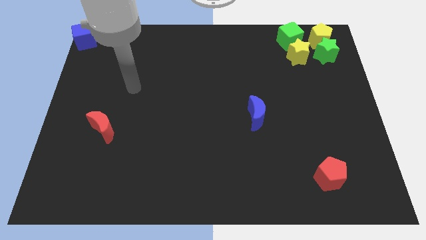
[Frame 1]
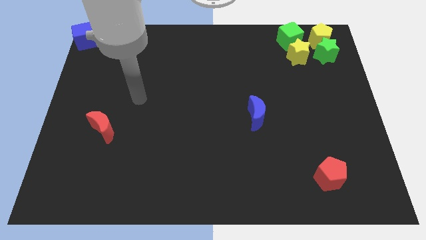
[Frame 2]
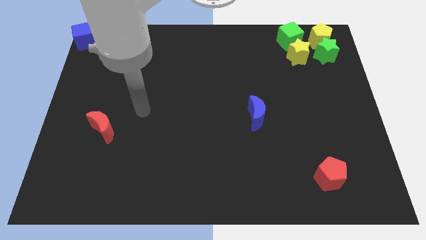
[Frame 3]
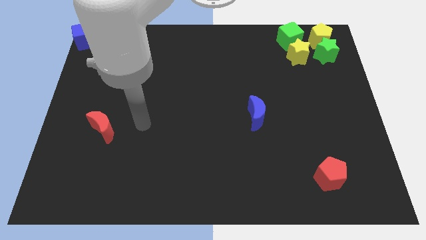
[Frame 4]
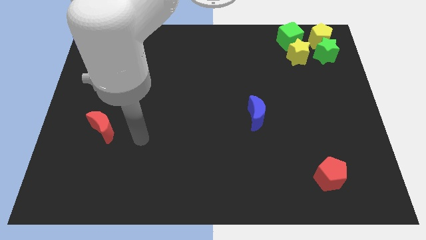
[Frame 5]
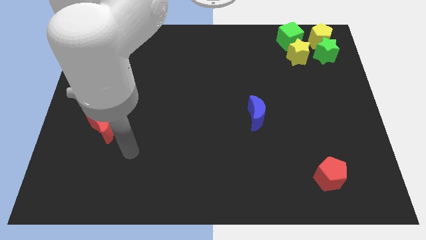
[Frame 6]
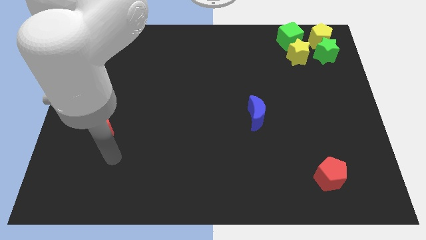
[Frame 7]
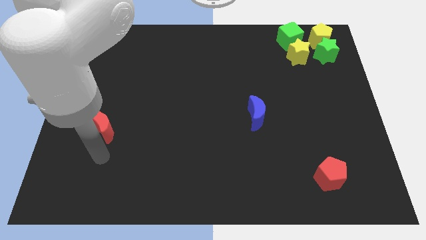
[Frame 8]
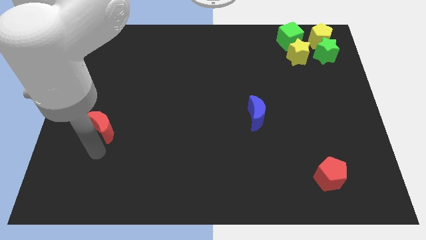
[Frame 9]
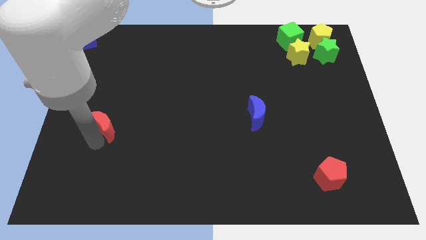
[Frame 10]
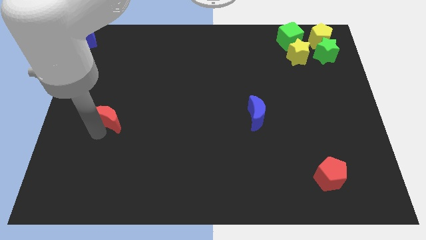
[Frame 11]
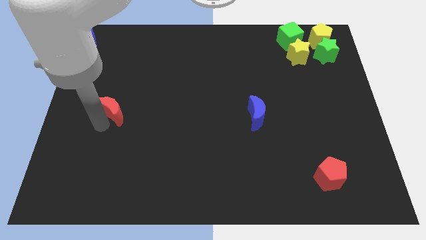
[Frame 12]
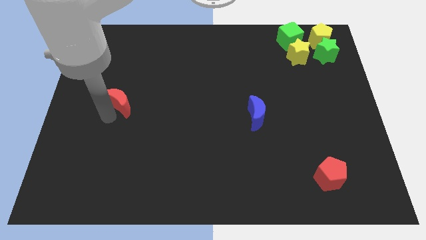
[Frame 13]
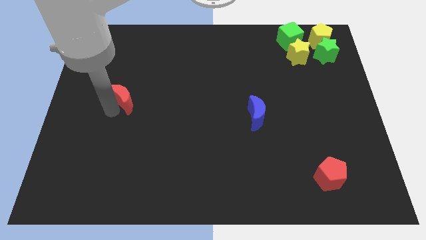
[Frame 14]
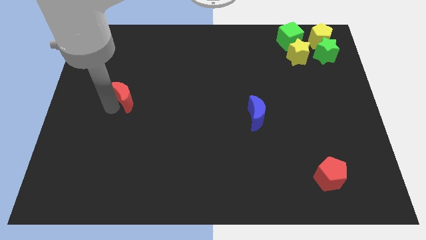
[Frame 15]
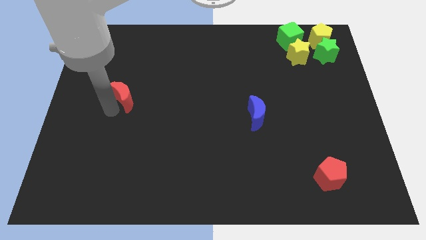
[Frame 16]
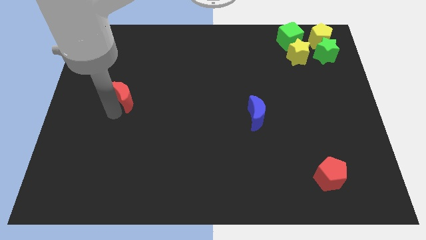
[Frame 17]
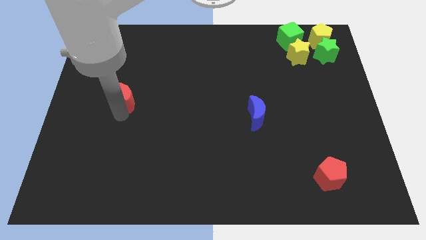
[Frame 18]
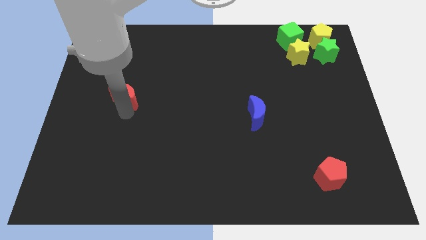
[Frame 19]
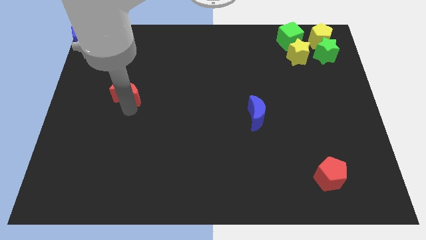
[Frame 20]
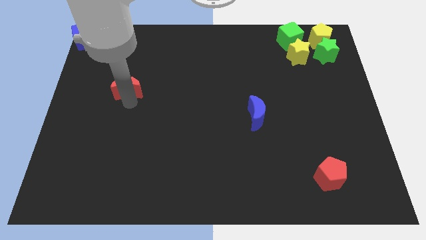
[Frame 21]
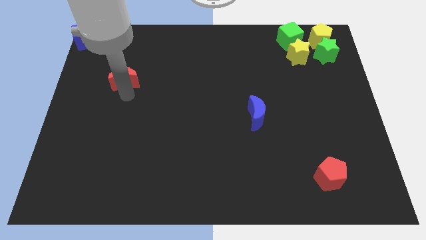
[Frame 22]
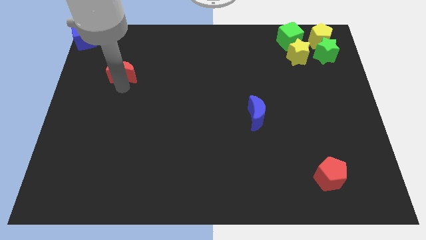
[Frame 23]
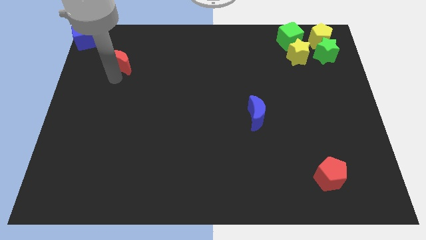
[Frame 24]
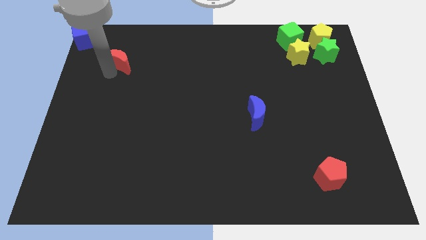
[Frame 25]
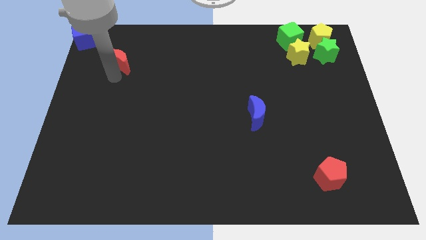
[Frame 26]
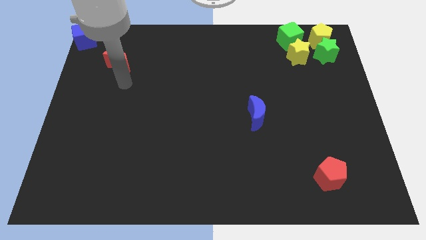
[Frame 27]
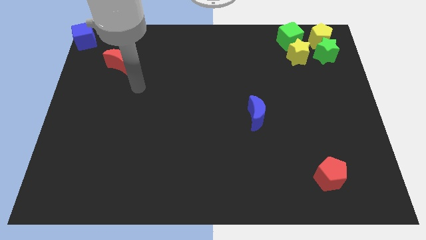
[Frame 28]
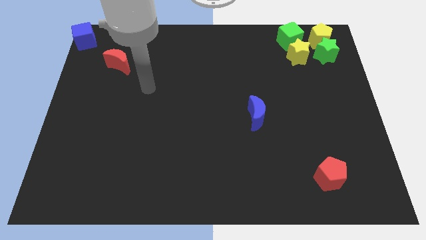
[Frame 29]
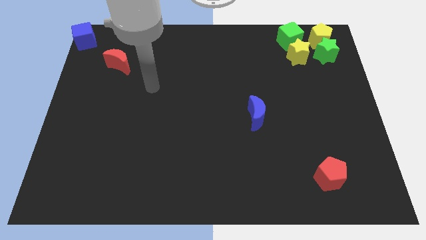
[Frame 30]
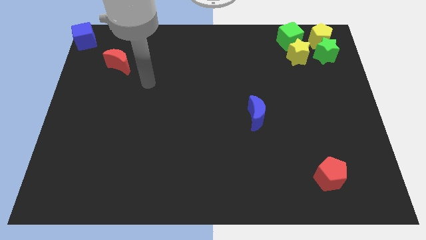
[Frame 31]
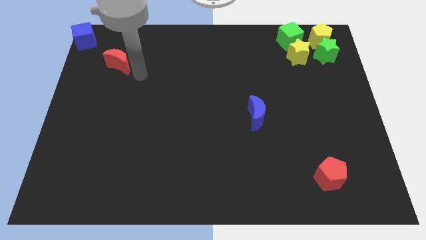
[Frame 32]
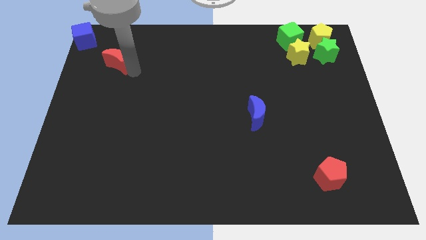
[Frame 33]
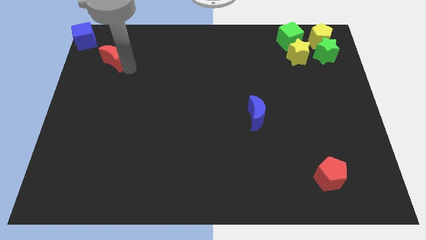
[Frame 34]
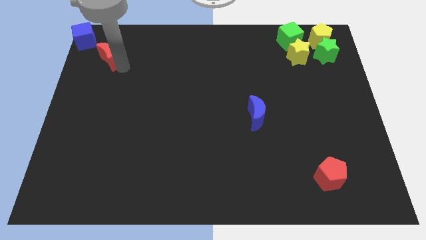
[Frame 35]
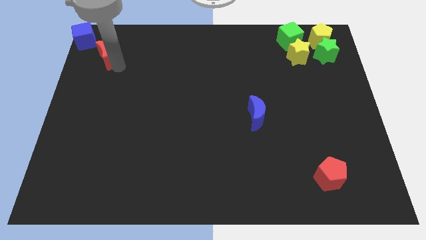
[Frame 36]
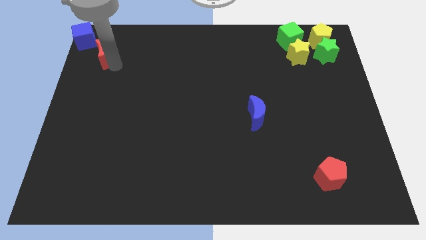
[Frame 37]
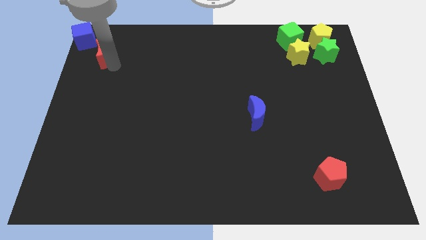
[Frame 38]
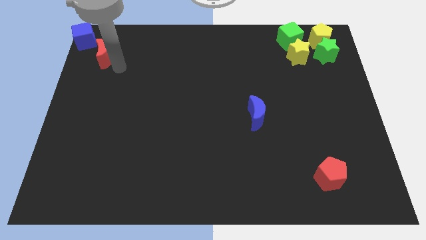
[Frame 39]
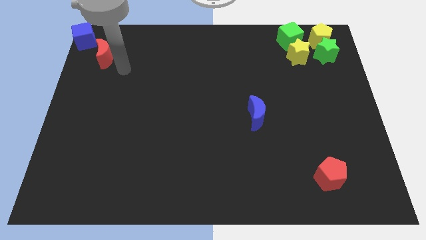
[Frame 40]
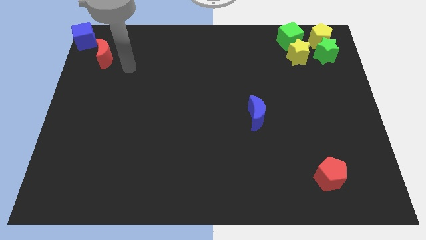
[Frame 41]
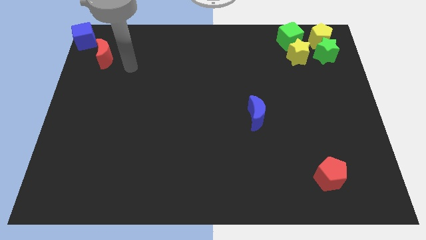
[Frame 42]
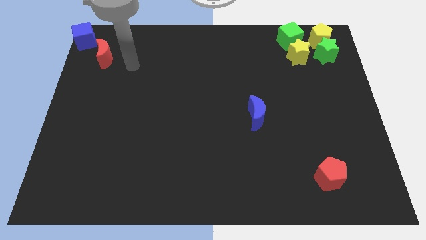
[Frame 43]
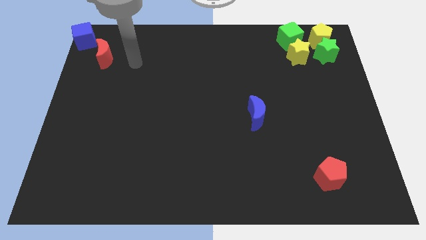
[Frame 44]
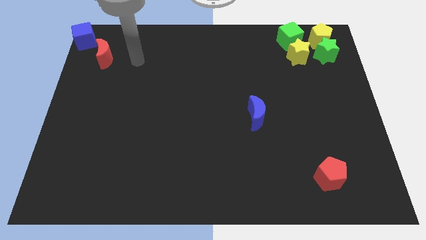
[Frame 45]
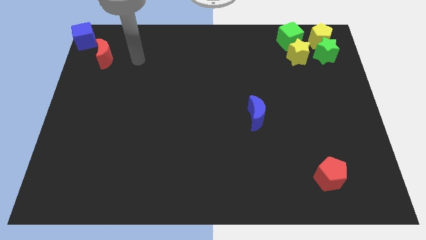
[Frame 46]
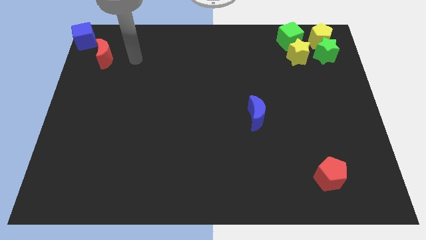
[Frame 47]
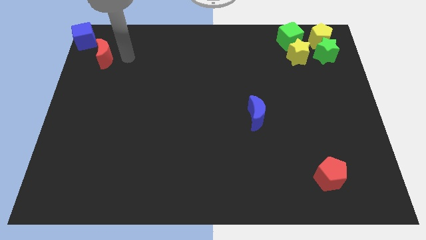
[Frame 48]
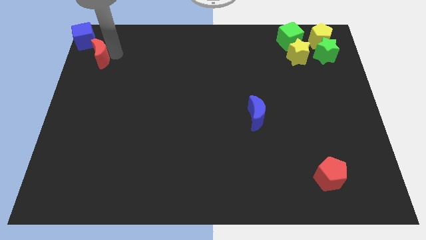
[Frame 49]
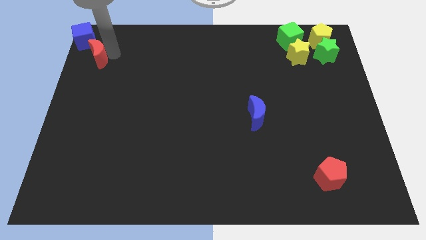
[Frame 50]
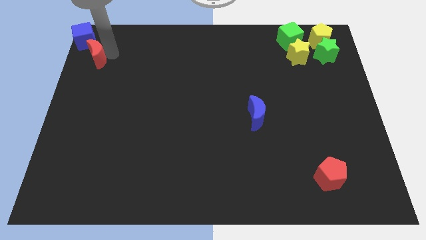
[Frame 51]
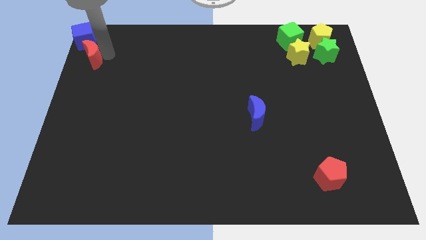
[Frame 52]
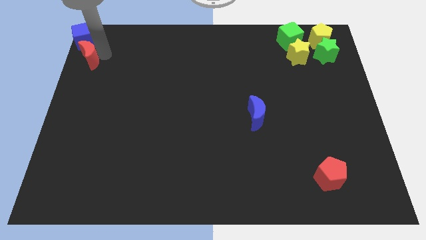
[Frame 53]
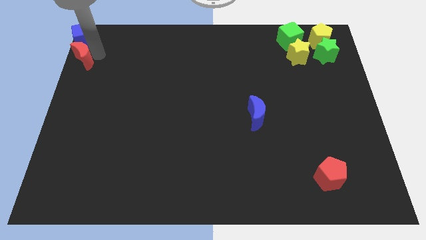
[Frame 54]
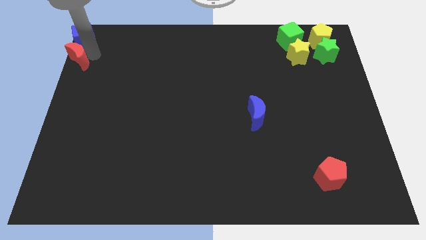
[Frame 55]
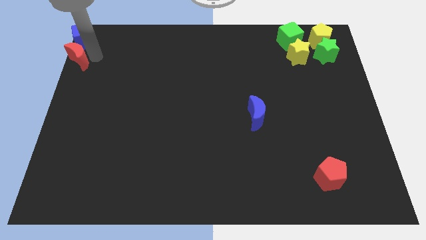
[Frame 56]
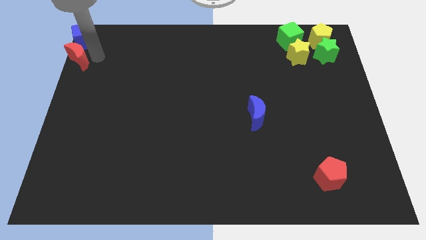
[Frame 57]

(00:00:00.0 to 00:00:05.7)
place the red crescent below the blue cube

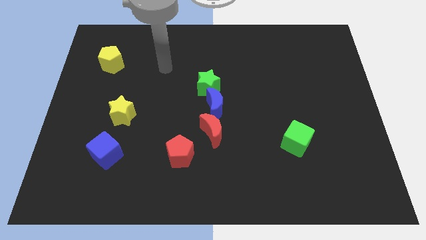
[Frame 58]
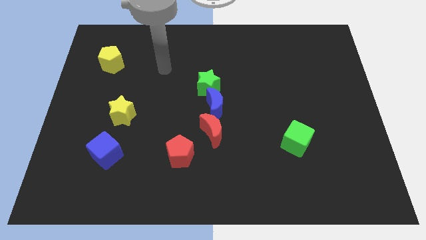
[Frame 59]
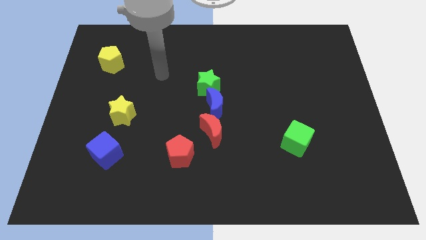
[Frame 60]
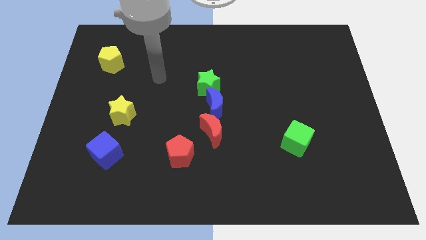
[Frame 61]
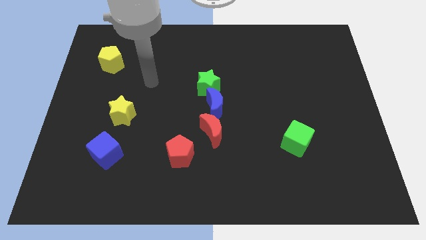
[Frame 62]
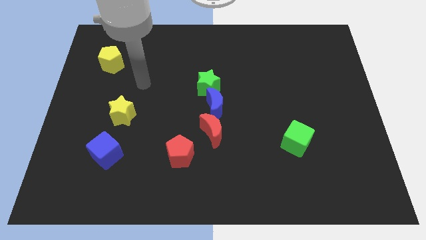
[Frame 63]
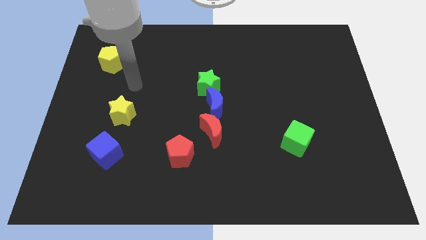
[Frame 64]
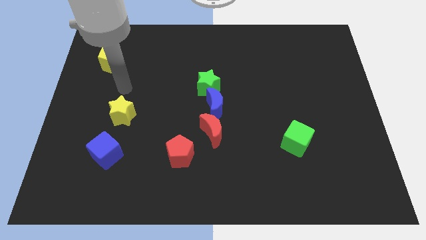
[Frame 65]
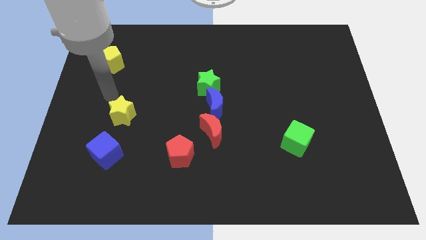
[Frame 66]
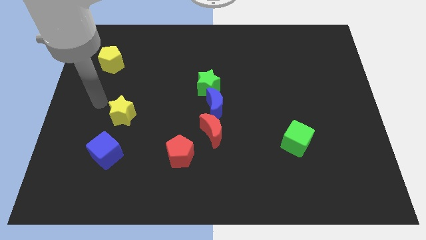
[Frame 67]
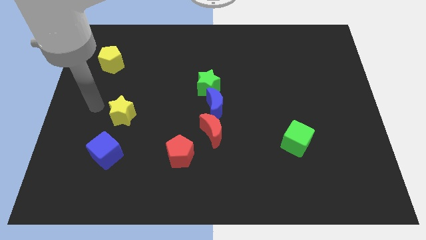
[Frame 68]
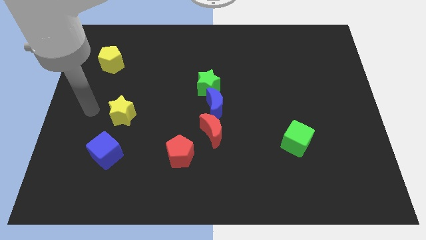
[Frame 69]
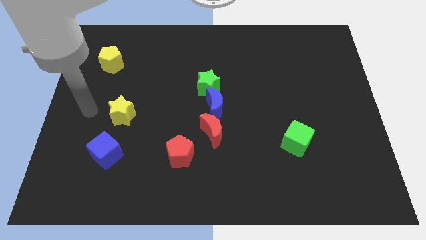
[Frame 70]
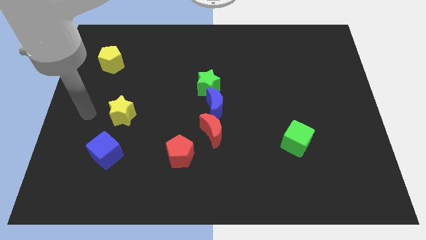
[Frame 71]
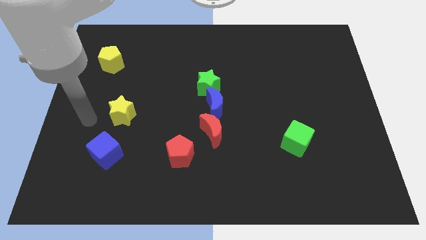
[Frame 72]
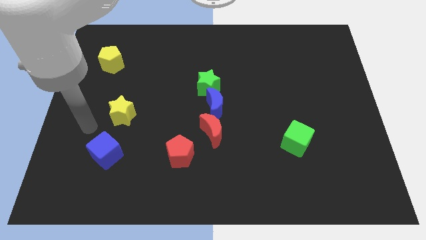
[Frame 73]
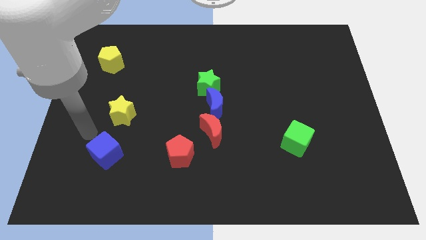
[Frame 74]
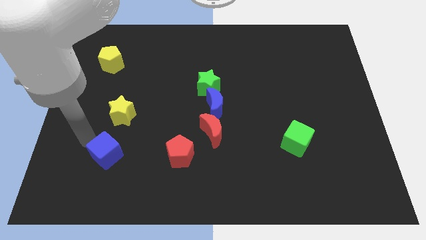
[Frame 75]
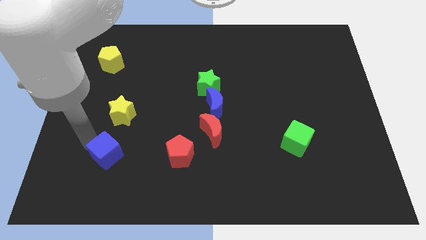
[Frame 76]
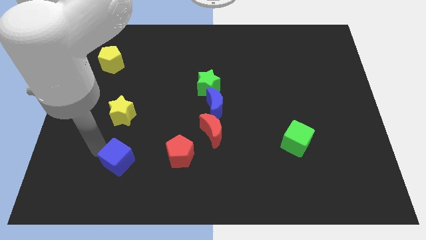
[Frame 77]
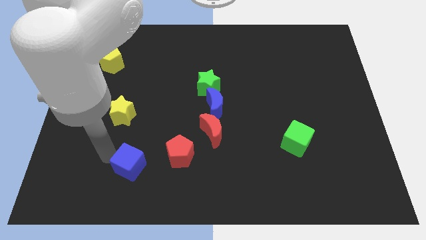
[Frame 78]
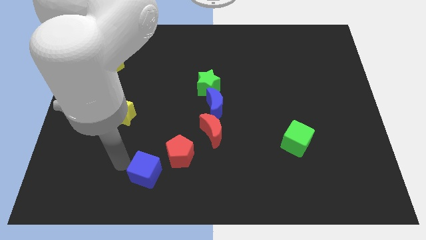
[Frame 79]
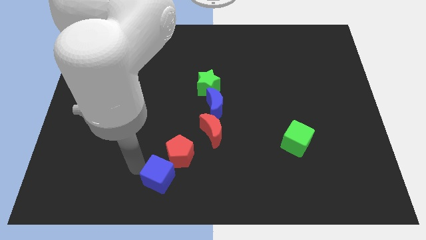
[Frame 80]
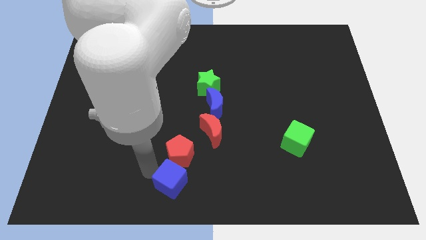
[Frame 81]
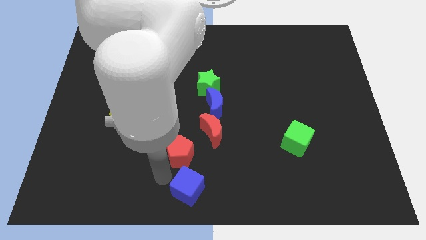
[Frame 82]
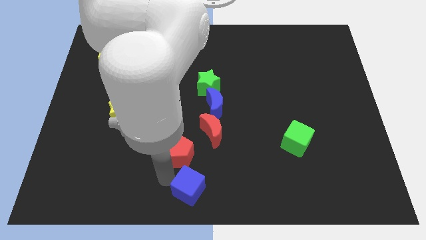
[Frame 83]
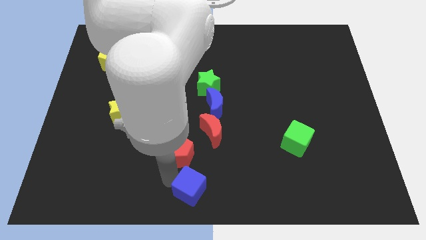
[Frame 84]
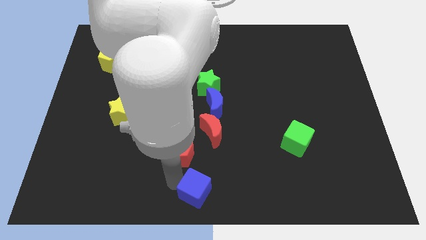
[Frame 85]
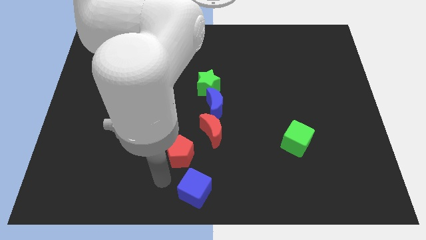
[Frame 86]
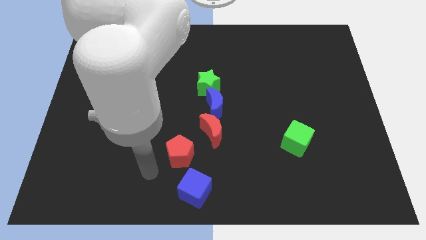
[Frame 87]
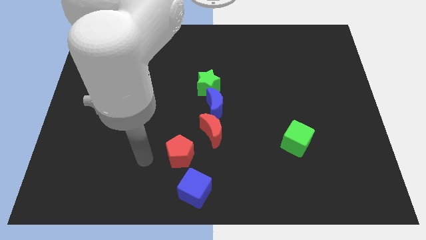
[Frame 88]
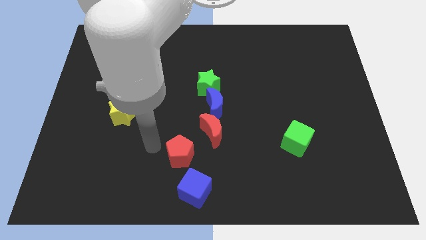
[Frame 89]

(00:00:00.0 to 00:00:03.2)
push the blue cube towards the bottom center
